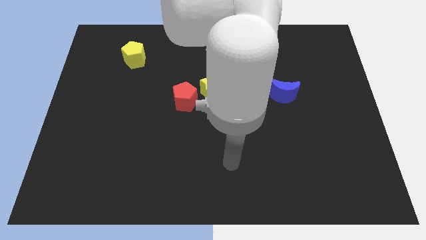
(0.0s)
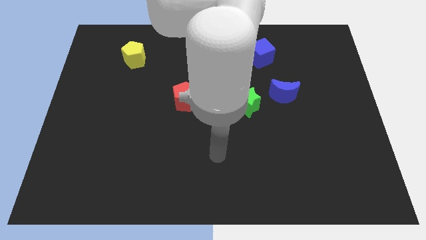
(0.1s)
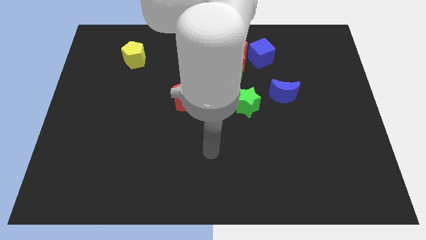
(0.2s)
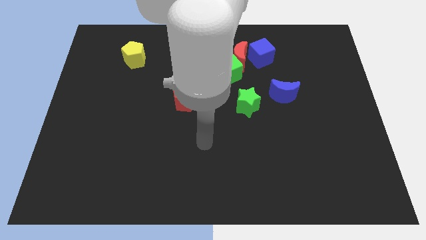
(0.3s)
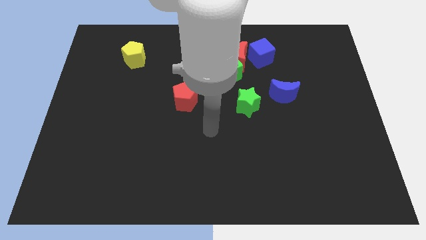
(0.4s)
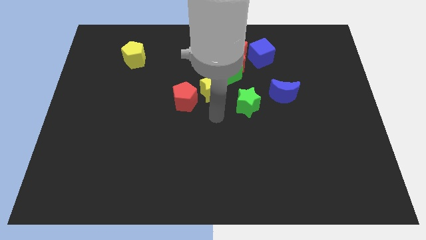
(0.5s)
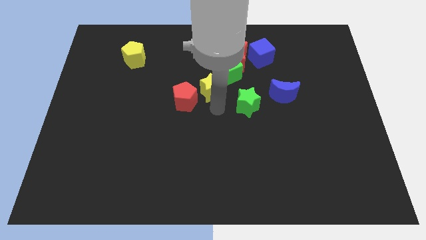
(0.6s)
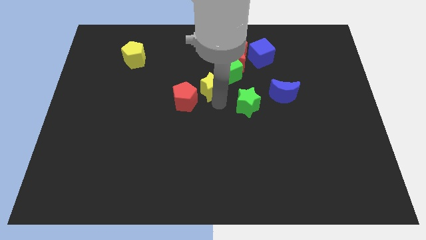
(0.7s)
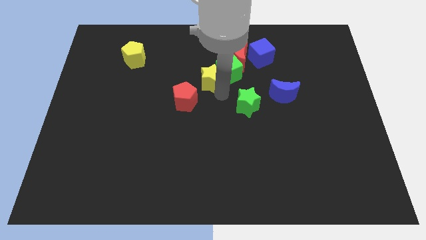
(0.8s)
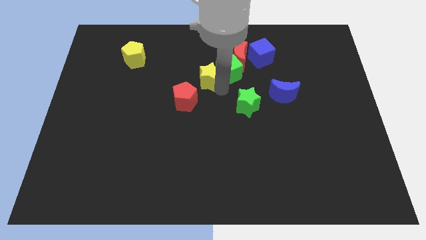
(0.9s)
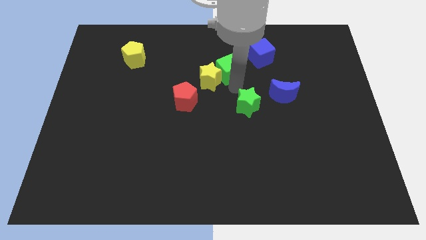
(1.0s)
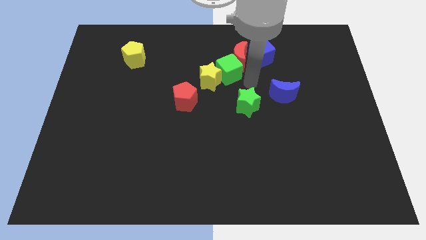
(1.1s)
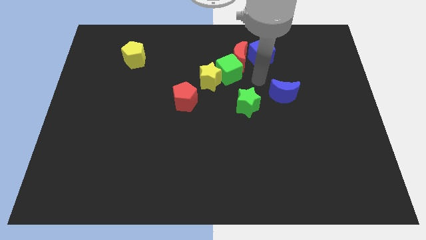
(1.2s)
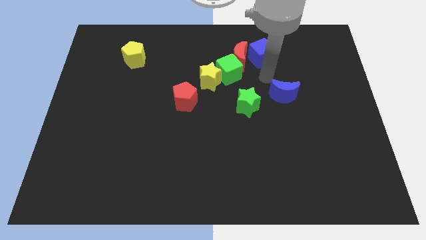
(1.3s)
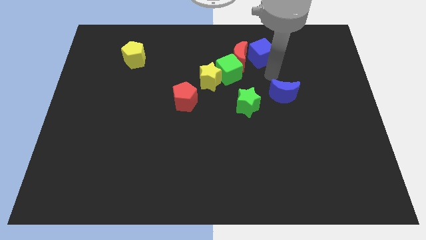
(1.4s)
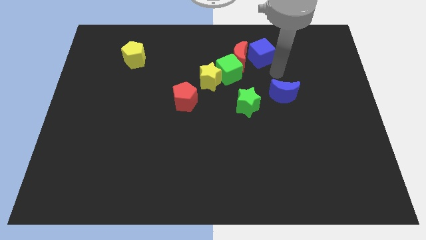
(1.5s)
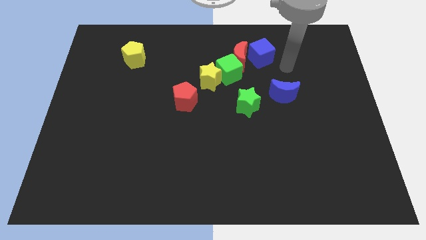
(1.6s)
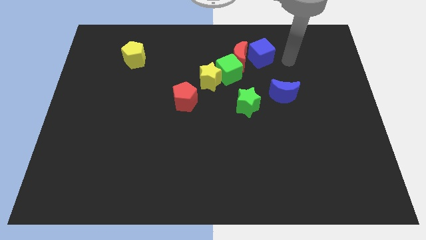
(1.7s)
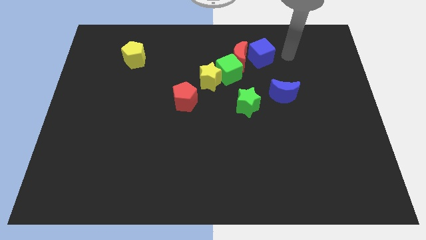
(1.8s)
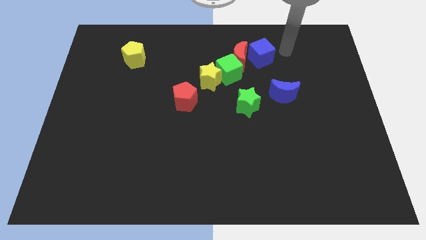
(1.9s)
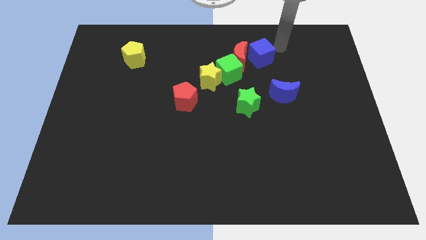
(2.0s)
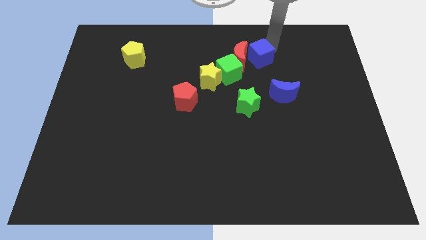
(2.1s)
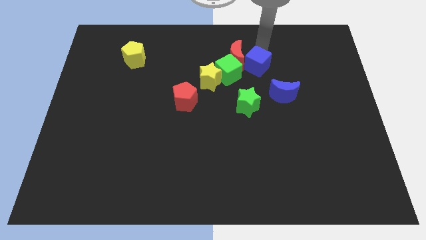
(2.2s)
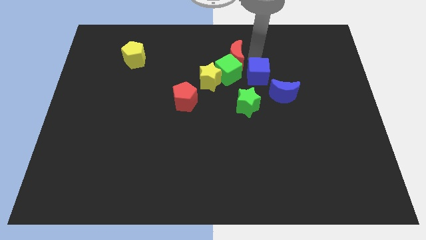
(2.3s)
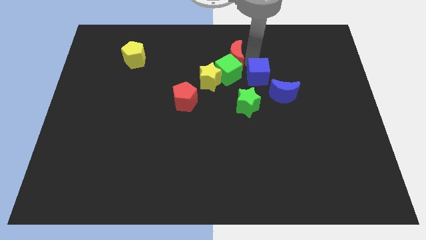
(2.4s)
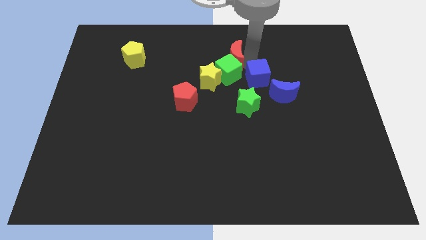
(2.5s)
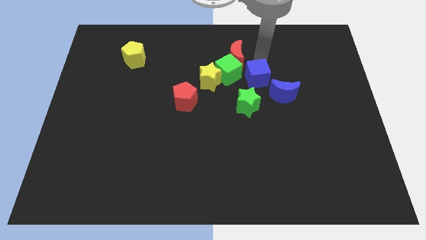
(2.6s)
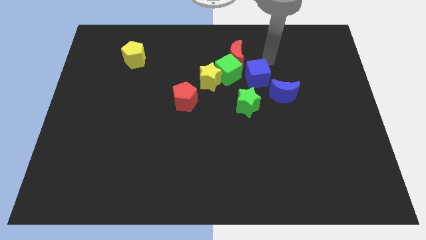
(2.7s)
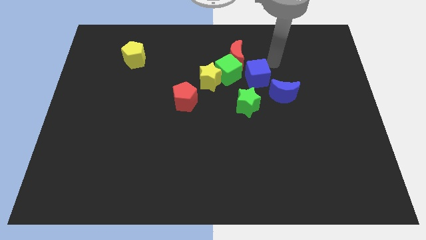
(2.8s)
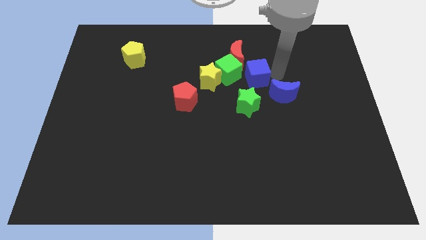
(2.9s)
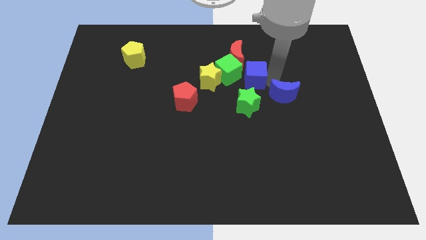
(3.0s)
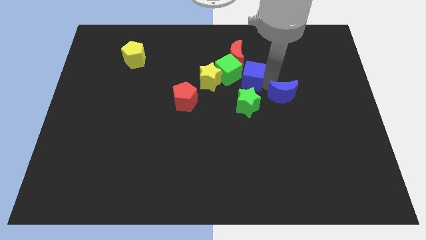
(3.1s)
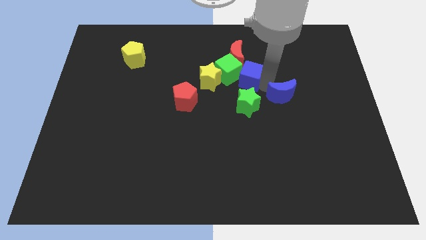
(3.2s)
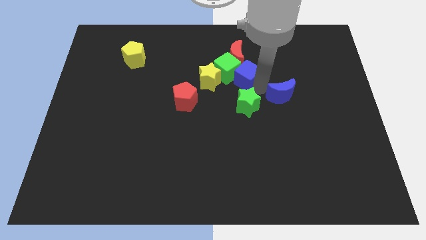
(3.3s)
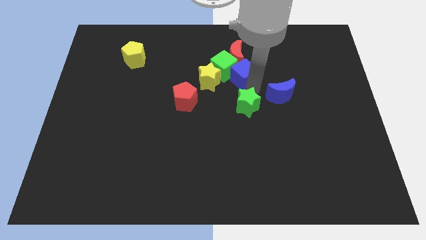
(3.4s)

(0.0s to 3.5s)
push the blue cube next to the green cube

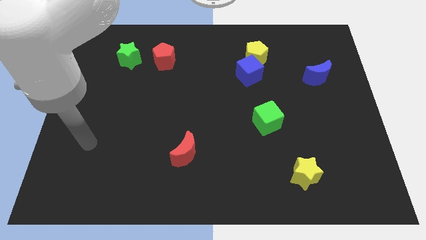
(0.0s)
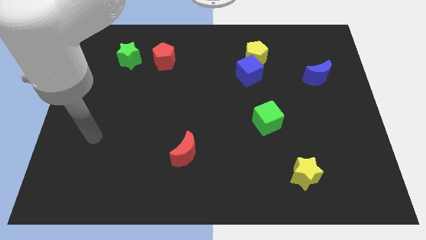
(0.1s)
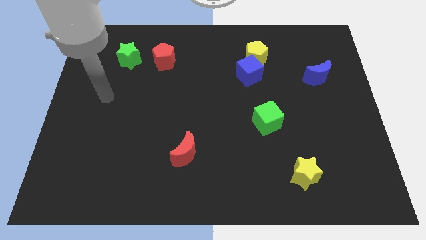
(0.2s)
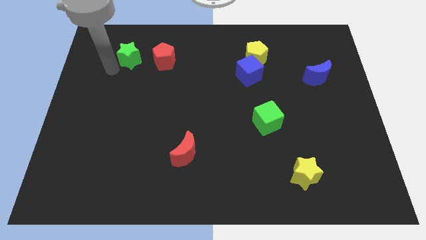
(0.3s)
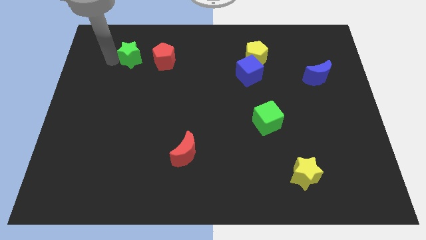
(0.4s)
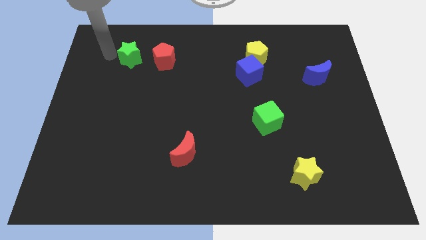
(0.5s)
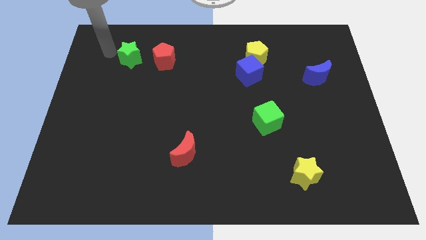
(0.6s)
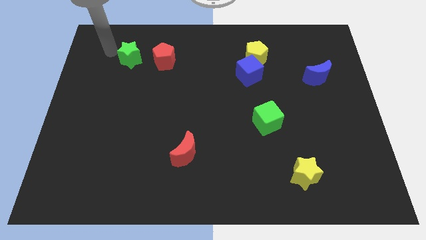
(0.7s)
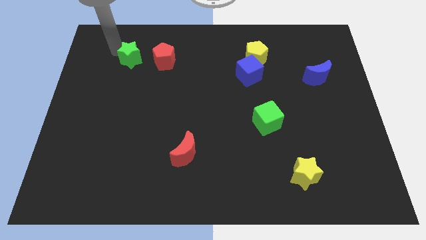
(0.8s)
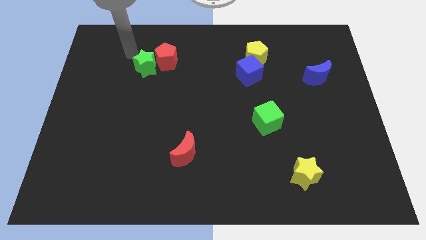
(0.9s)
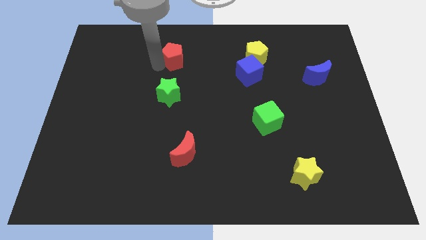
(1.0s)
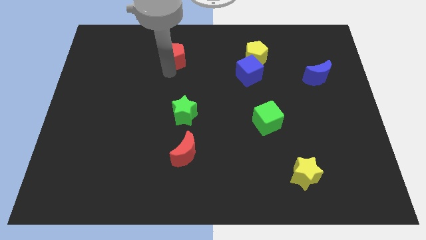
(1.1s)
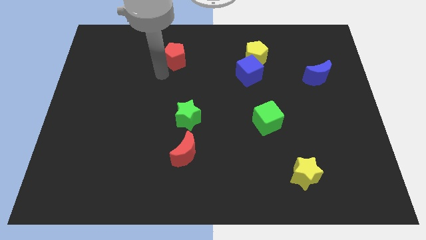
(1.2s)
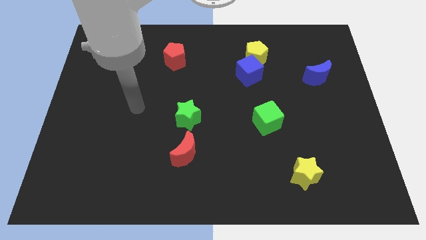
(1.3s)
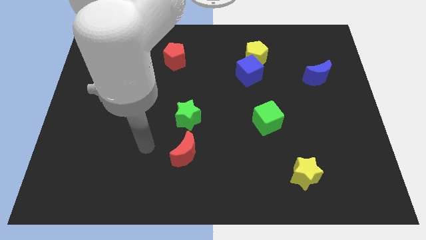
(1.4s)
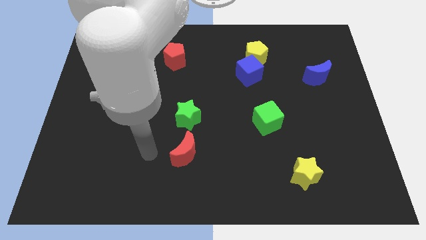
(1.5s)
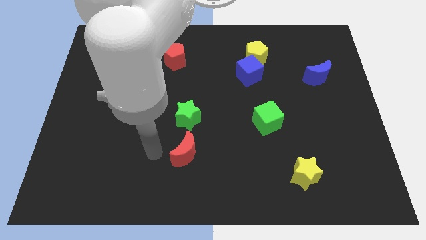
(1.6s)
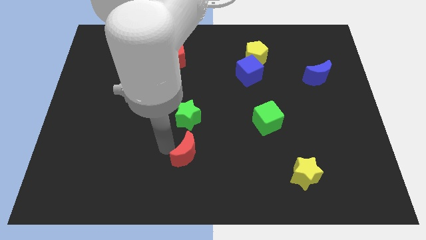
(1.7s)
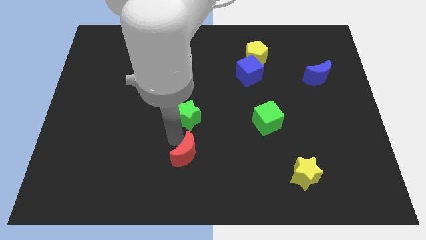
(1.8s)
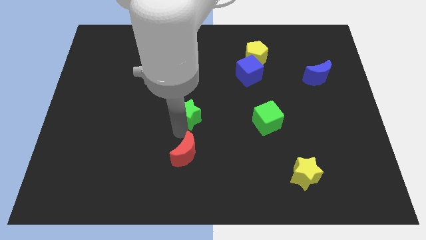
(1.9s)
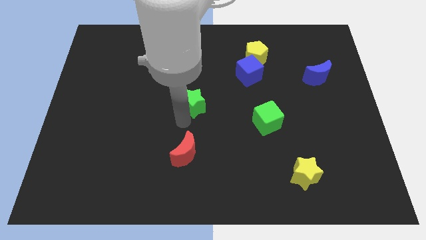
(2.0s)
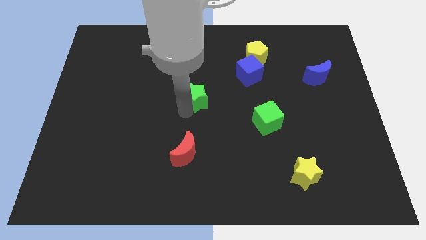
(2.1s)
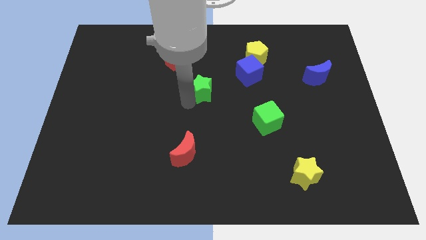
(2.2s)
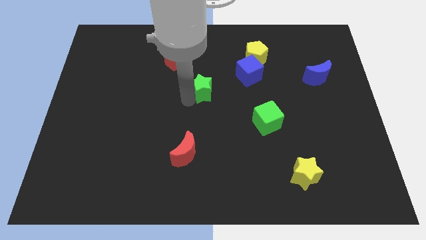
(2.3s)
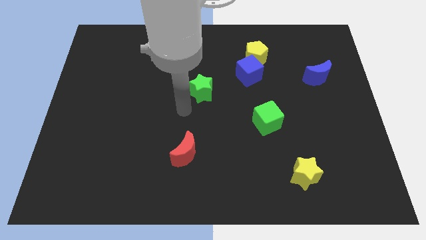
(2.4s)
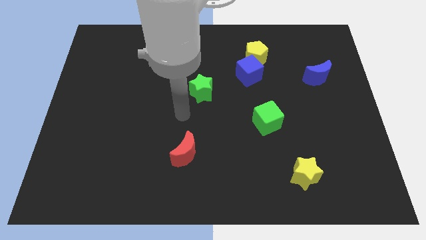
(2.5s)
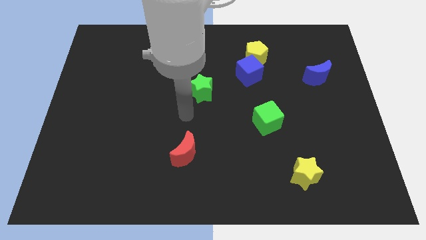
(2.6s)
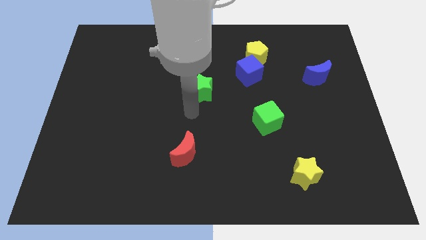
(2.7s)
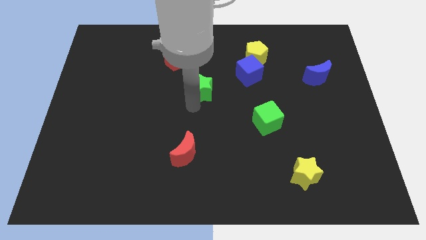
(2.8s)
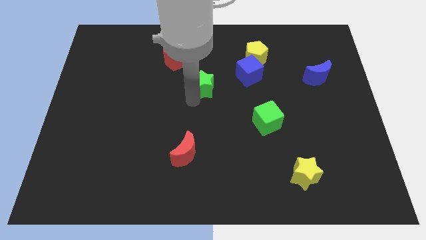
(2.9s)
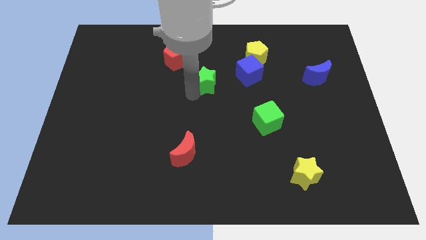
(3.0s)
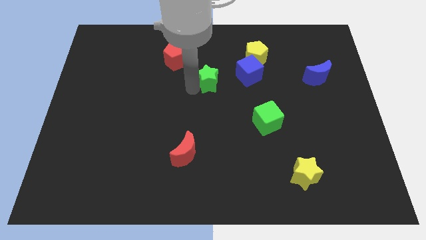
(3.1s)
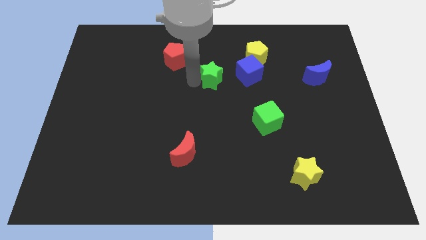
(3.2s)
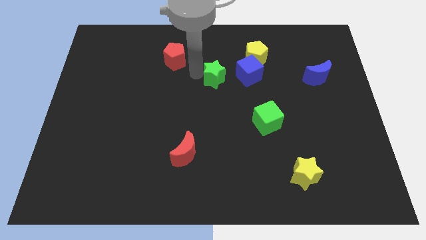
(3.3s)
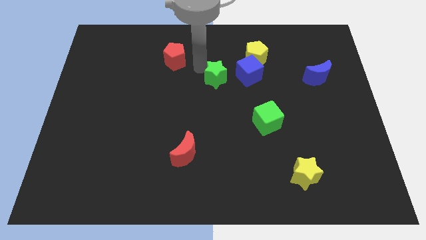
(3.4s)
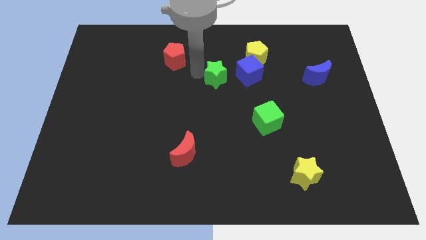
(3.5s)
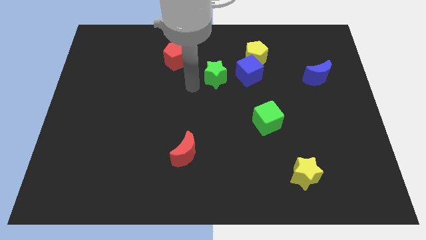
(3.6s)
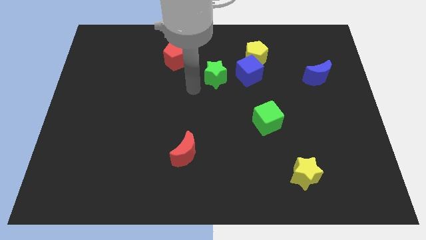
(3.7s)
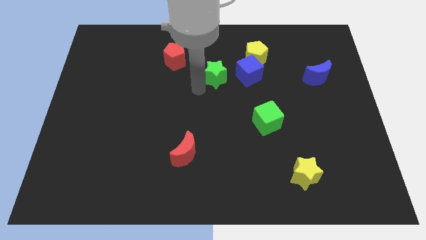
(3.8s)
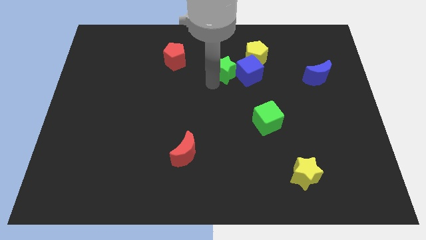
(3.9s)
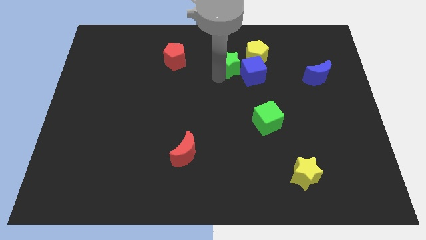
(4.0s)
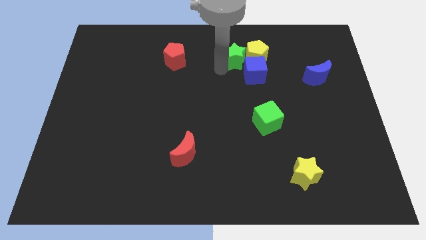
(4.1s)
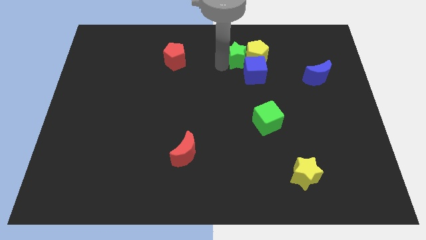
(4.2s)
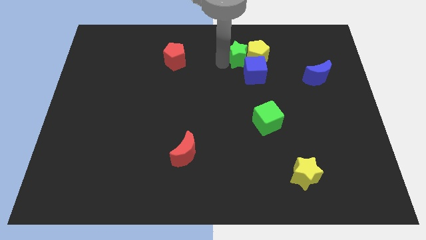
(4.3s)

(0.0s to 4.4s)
put the green star next to the yellow pentagon

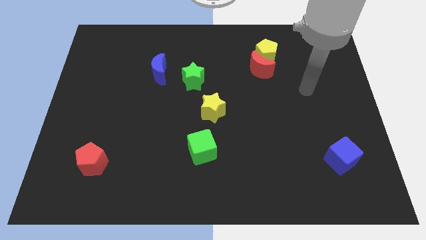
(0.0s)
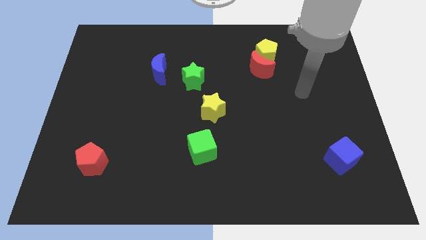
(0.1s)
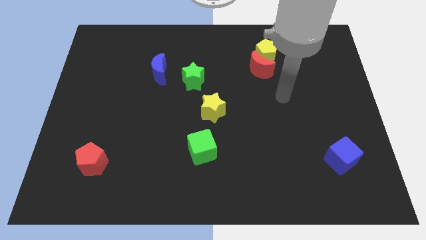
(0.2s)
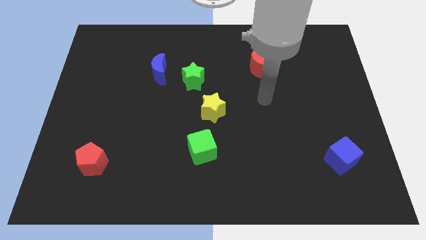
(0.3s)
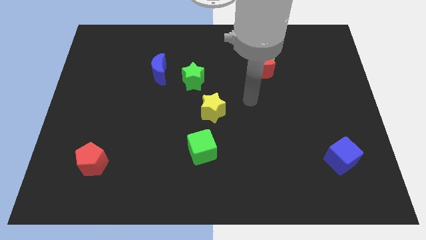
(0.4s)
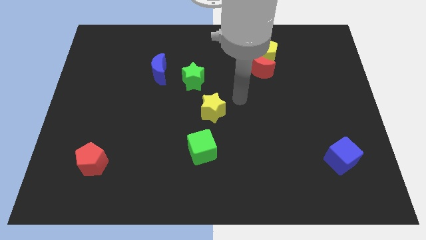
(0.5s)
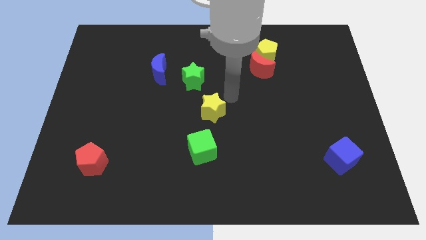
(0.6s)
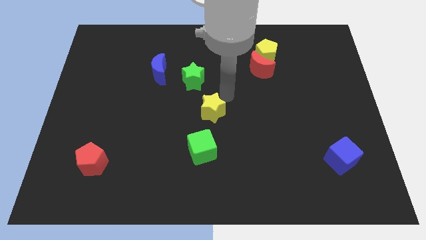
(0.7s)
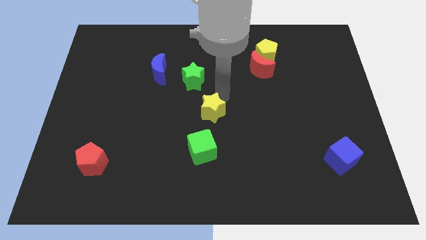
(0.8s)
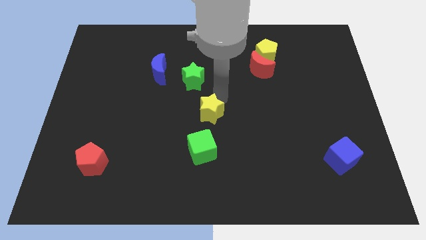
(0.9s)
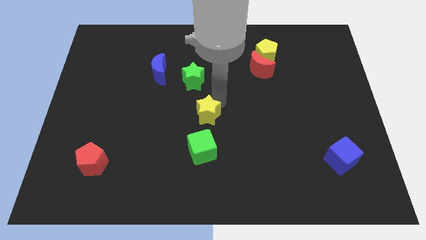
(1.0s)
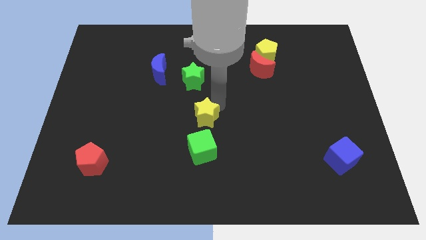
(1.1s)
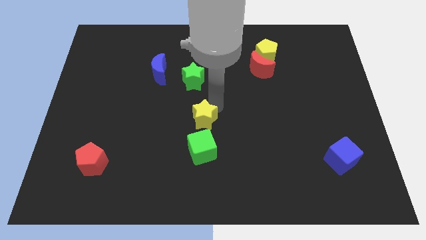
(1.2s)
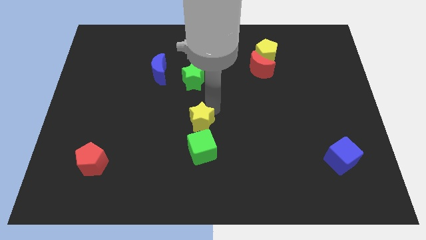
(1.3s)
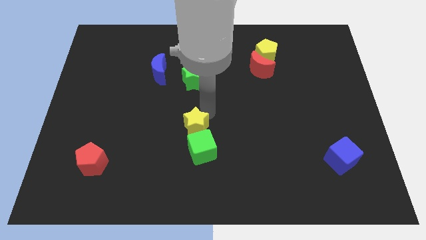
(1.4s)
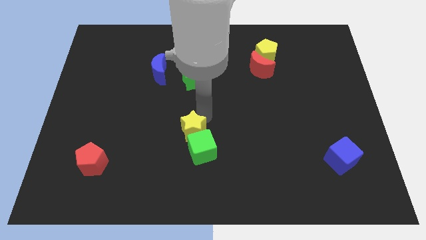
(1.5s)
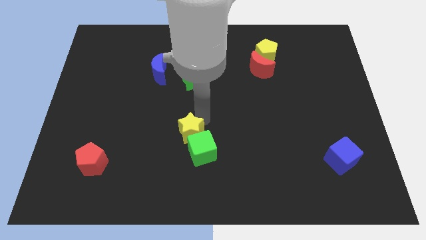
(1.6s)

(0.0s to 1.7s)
push the yellow star next to the green cube
